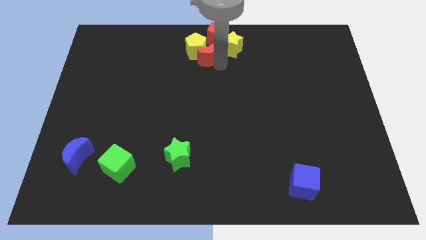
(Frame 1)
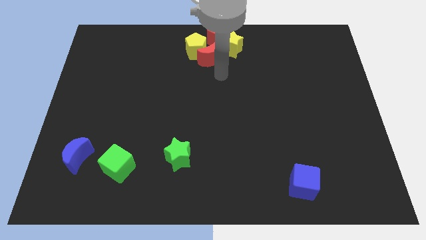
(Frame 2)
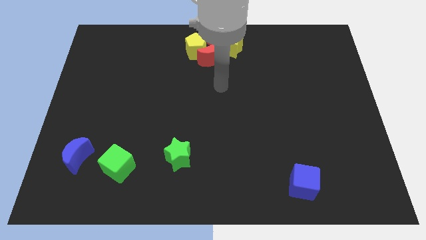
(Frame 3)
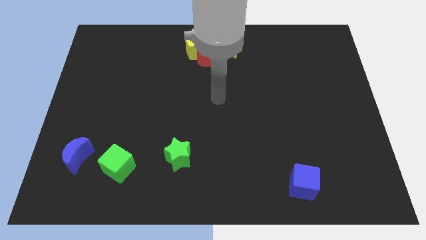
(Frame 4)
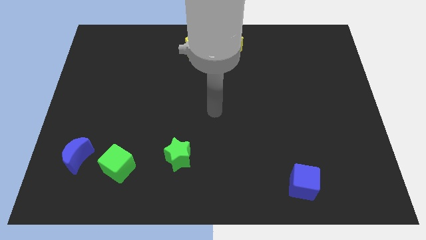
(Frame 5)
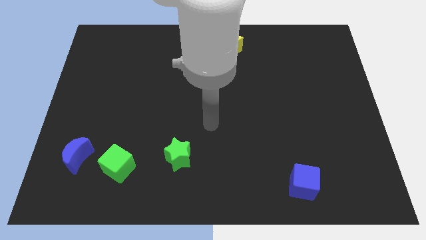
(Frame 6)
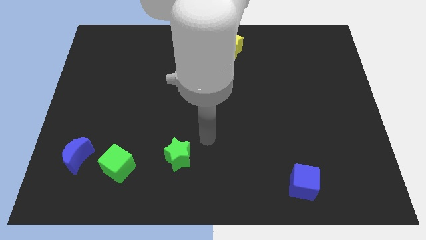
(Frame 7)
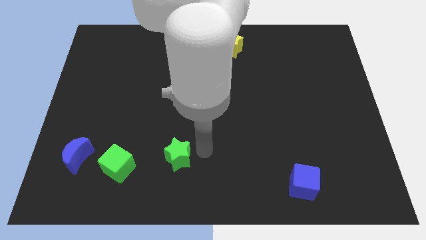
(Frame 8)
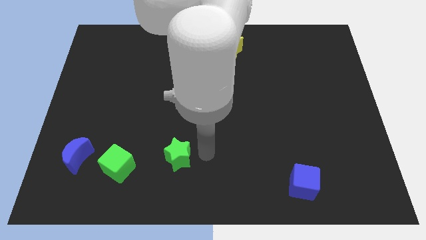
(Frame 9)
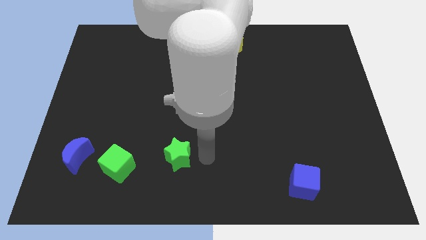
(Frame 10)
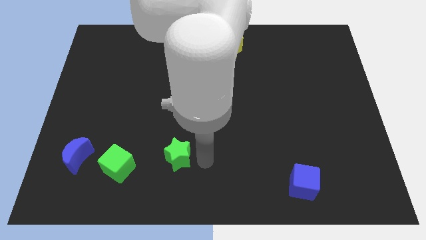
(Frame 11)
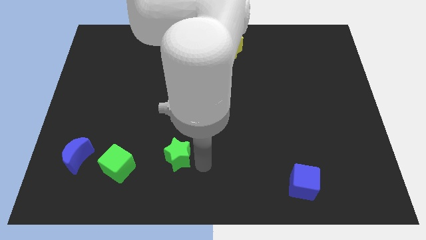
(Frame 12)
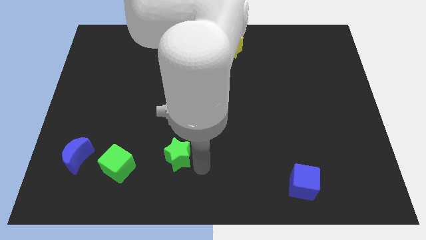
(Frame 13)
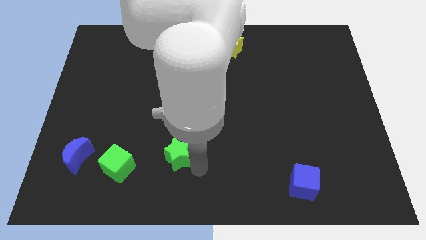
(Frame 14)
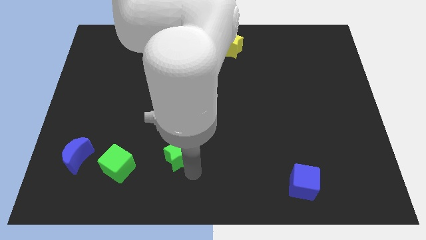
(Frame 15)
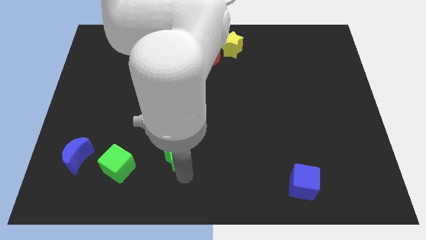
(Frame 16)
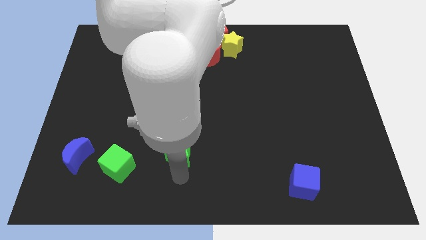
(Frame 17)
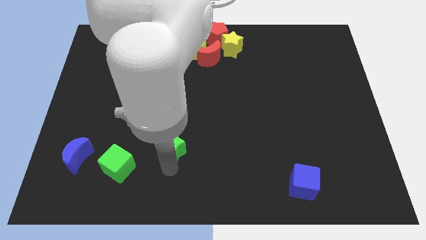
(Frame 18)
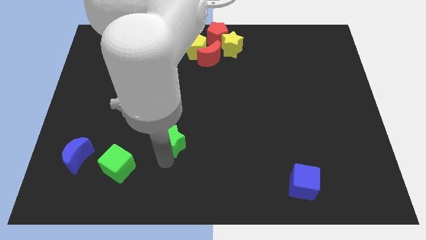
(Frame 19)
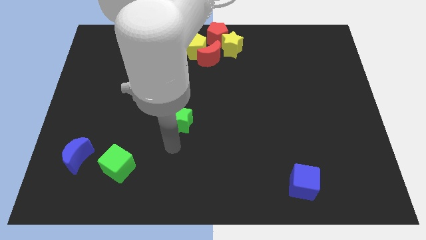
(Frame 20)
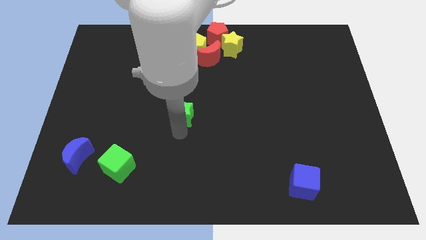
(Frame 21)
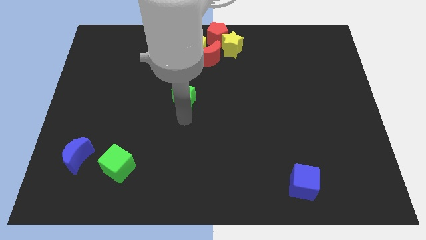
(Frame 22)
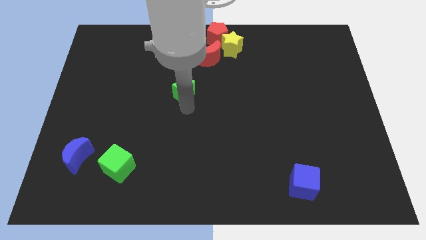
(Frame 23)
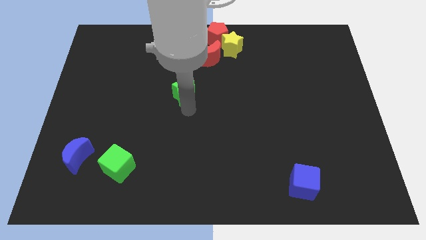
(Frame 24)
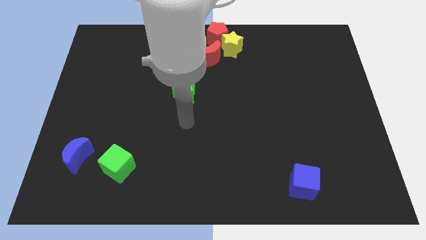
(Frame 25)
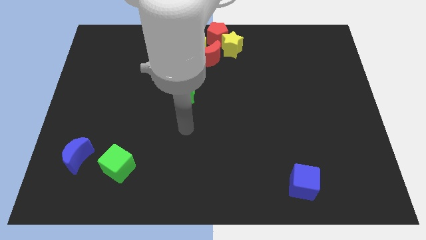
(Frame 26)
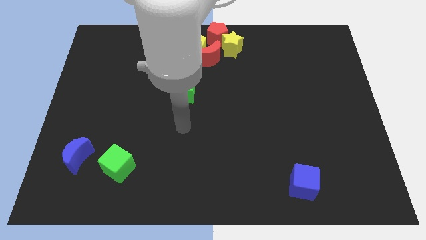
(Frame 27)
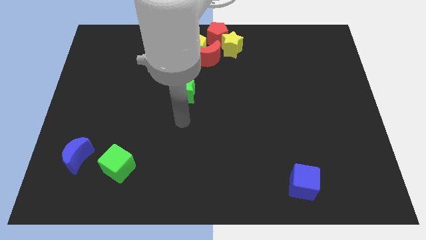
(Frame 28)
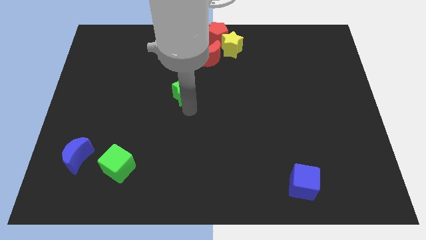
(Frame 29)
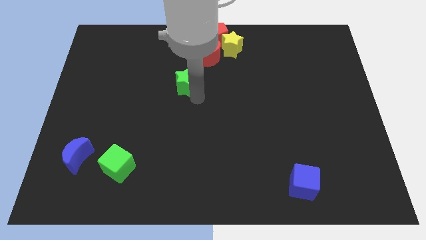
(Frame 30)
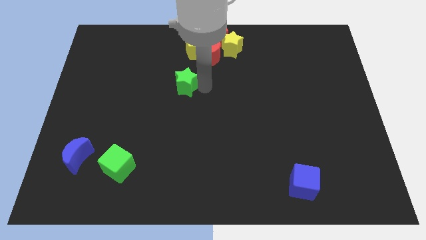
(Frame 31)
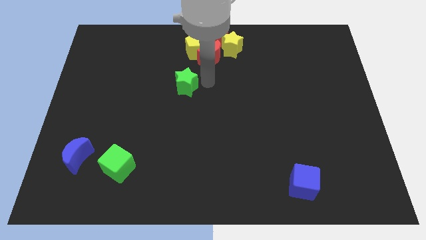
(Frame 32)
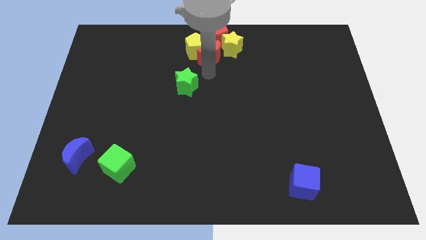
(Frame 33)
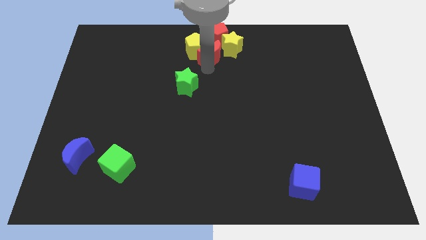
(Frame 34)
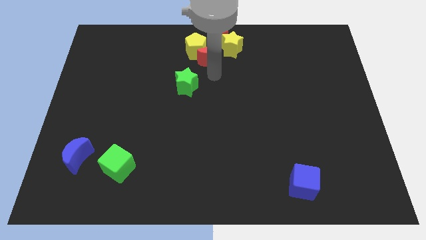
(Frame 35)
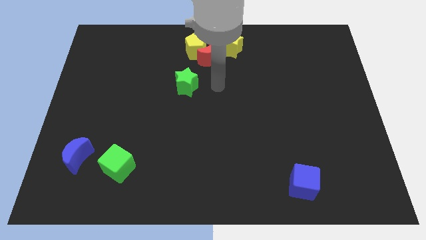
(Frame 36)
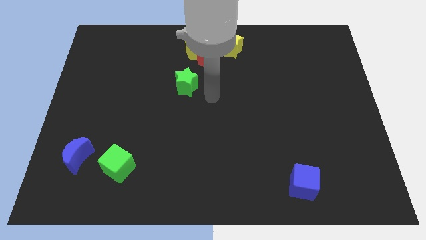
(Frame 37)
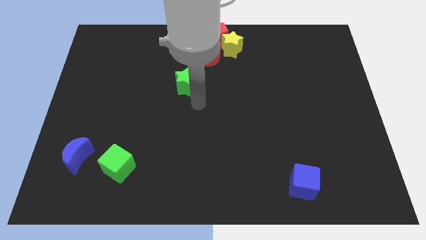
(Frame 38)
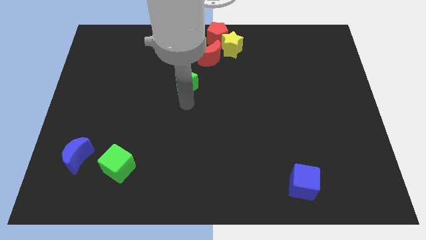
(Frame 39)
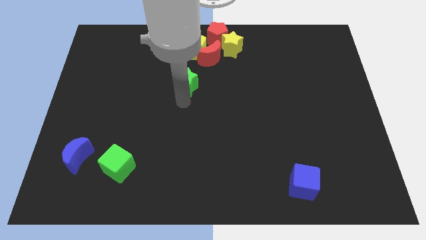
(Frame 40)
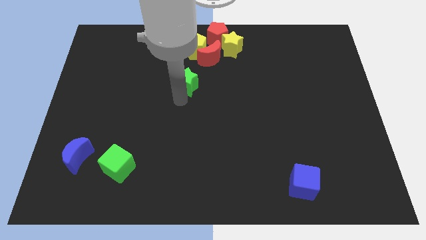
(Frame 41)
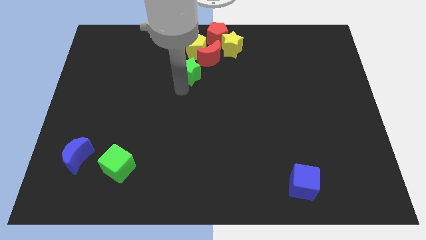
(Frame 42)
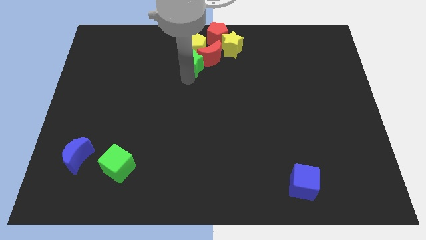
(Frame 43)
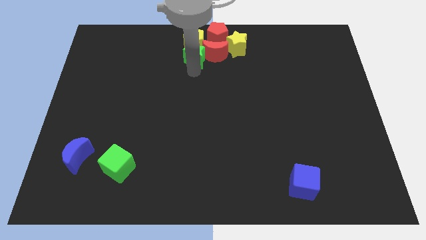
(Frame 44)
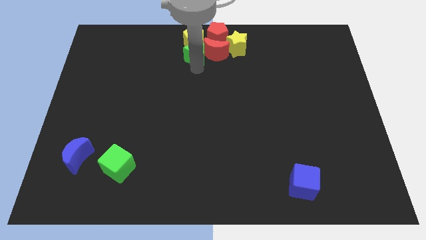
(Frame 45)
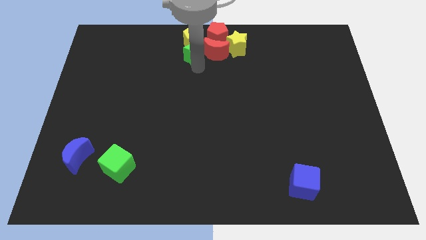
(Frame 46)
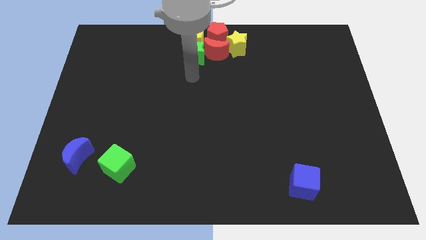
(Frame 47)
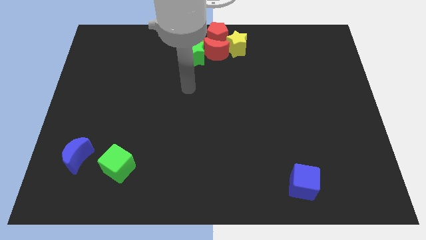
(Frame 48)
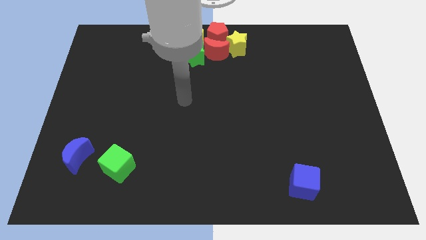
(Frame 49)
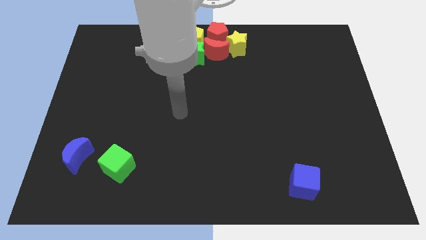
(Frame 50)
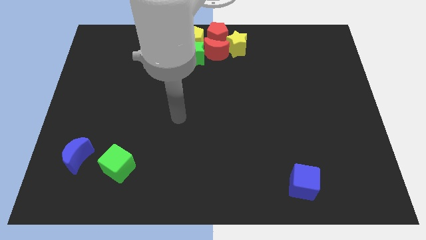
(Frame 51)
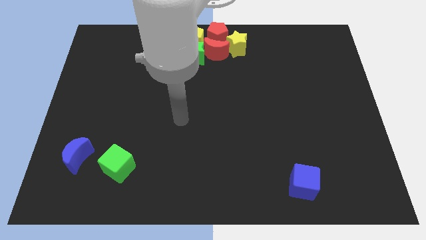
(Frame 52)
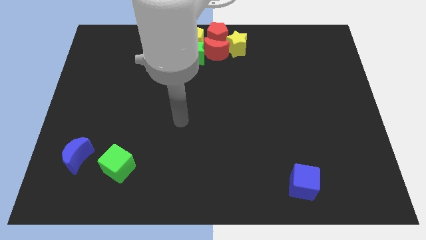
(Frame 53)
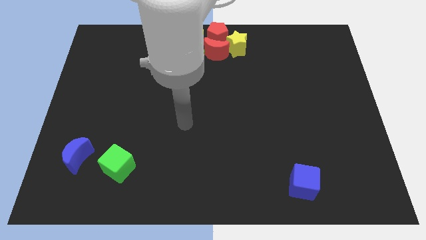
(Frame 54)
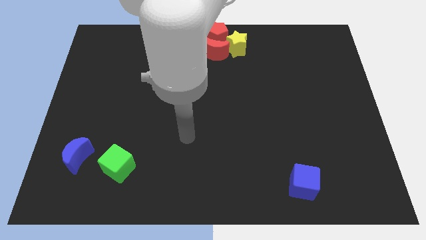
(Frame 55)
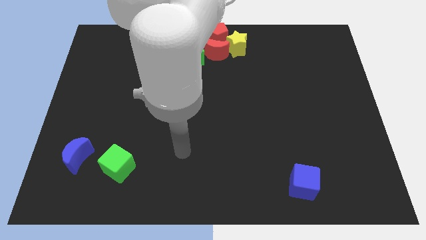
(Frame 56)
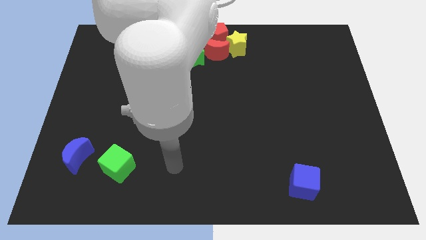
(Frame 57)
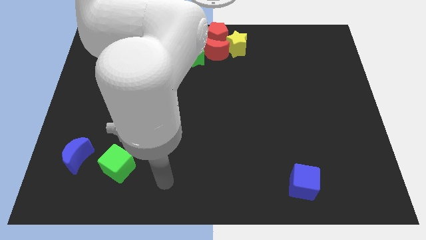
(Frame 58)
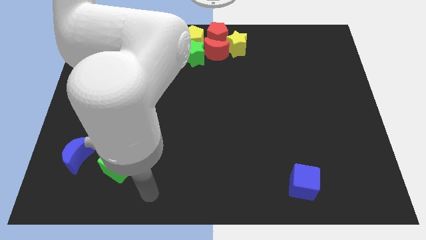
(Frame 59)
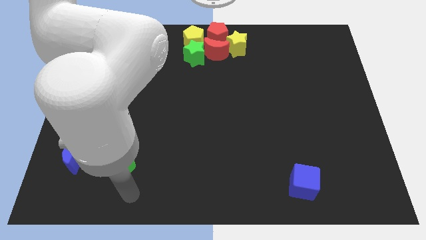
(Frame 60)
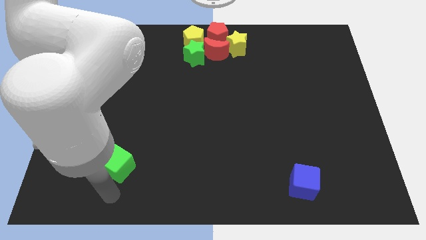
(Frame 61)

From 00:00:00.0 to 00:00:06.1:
move green star to bottom left of red crescent

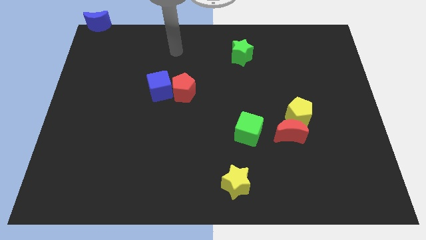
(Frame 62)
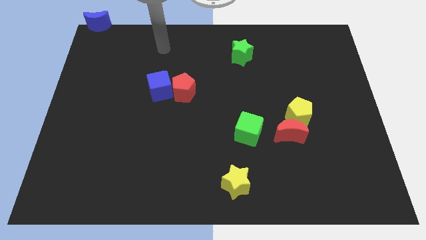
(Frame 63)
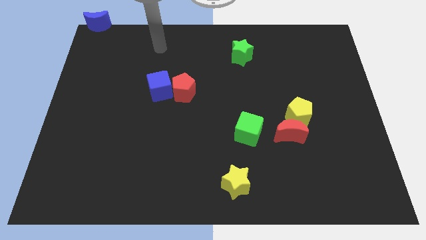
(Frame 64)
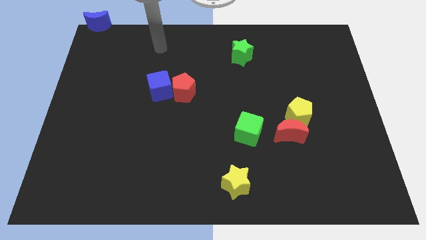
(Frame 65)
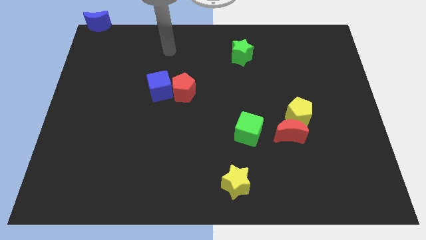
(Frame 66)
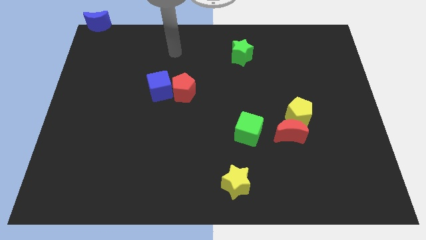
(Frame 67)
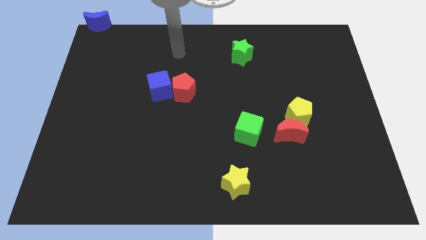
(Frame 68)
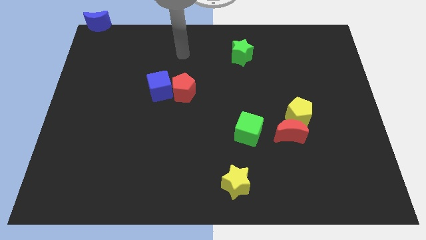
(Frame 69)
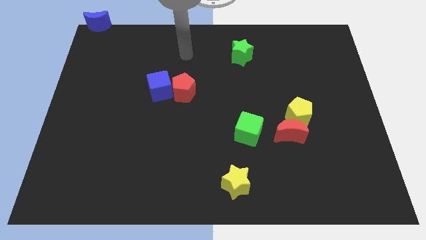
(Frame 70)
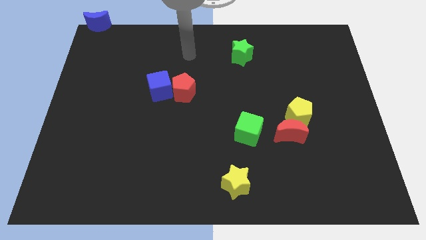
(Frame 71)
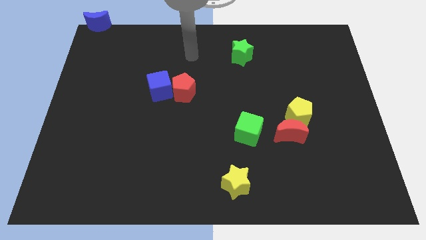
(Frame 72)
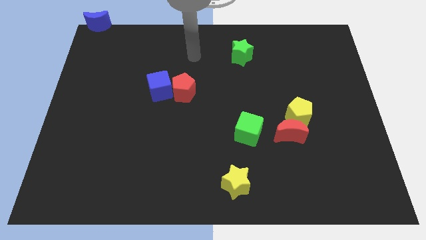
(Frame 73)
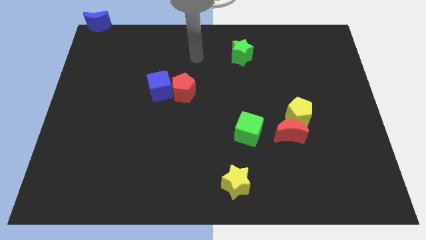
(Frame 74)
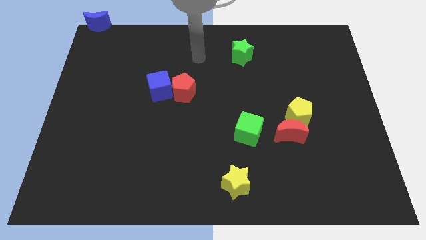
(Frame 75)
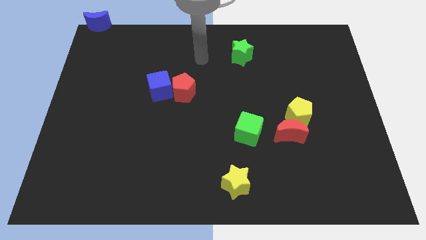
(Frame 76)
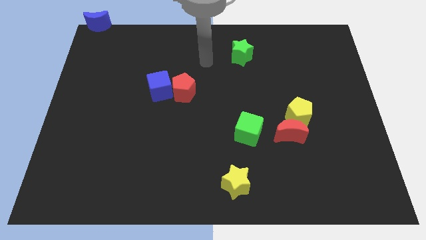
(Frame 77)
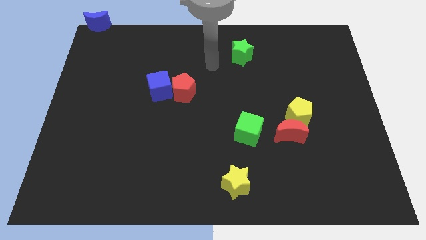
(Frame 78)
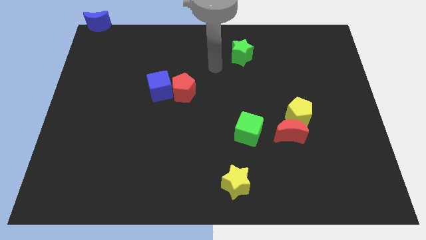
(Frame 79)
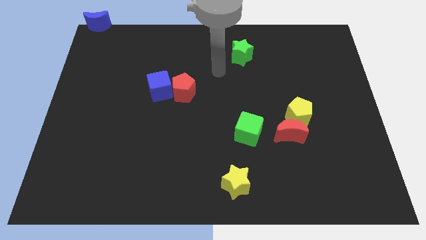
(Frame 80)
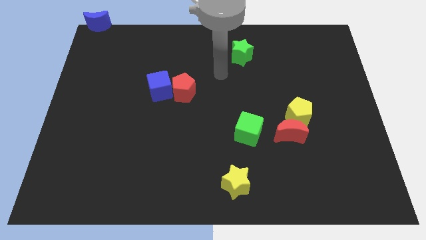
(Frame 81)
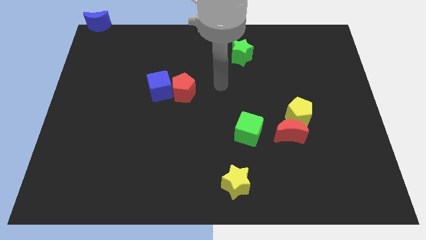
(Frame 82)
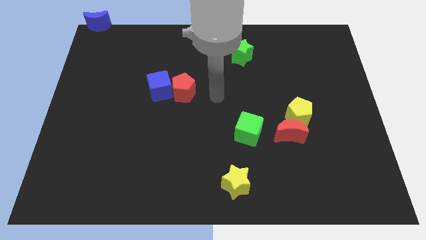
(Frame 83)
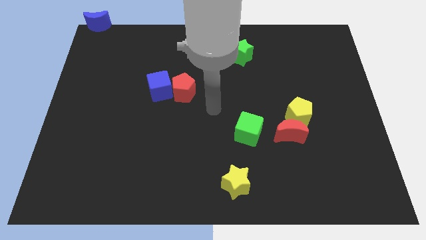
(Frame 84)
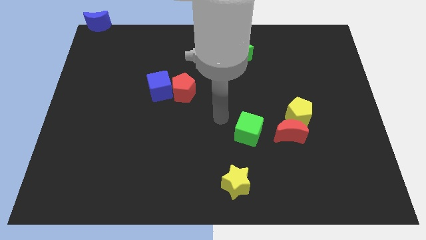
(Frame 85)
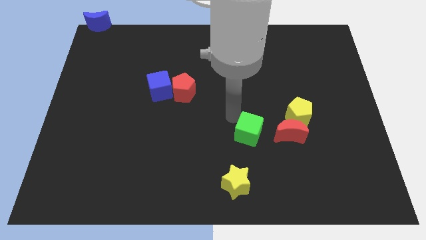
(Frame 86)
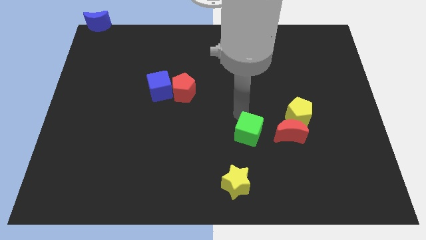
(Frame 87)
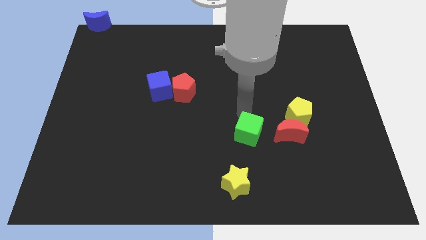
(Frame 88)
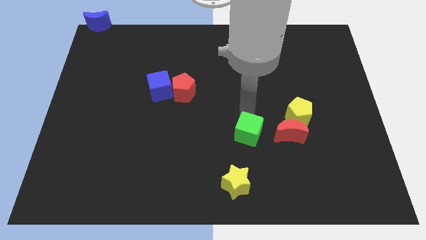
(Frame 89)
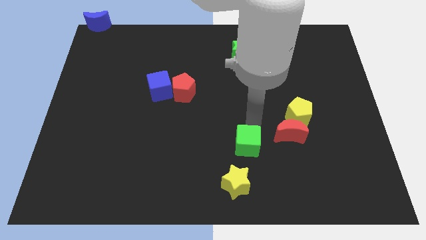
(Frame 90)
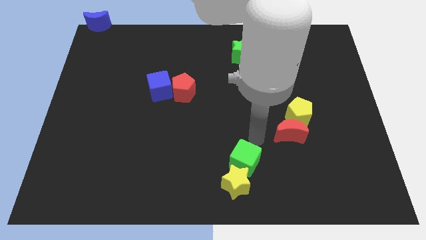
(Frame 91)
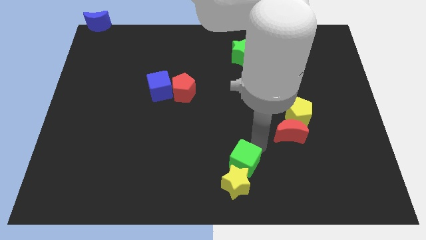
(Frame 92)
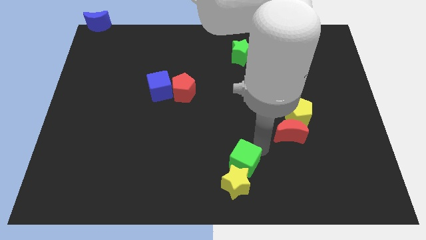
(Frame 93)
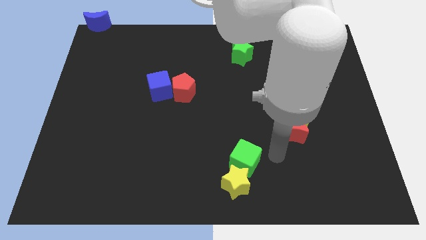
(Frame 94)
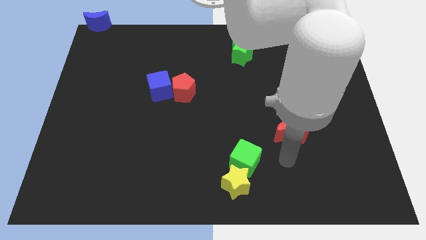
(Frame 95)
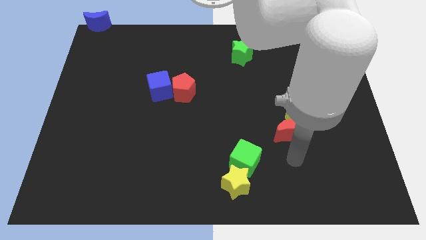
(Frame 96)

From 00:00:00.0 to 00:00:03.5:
slightly move the green cube to the top of the yellow star
